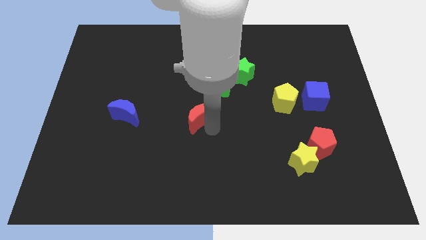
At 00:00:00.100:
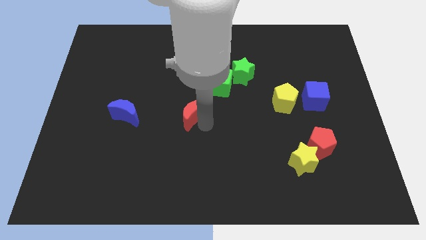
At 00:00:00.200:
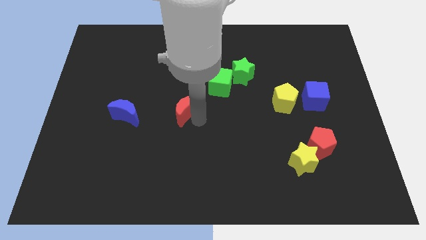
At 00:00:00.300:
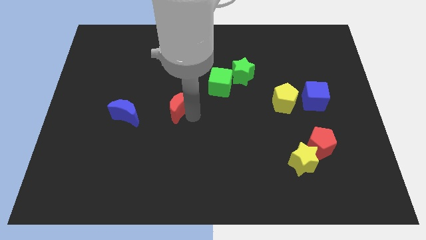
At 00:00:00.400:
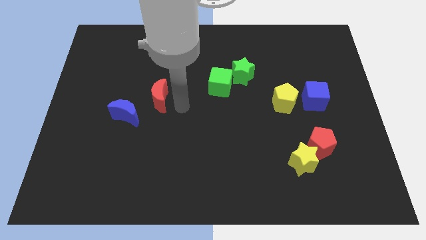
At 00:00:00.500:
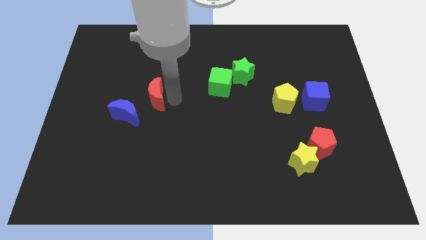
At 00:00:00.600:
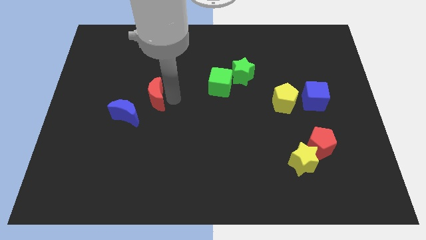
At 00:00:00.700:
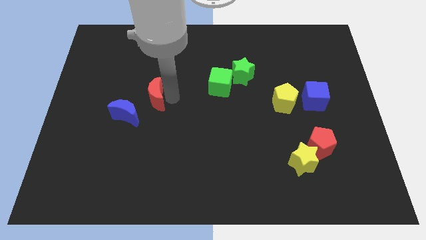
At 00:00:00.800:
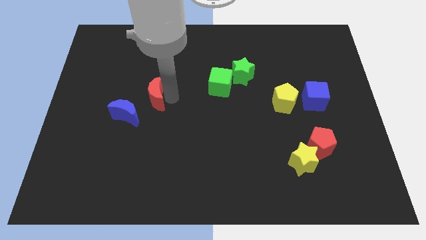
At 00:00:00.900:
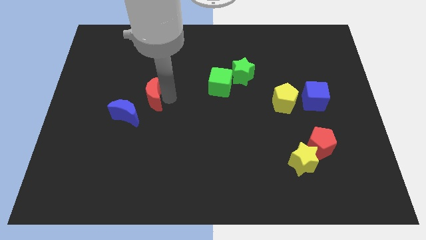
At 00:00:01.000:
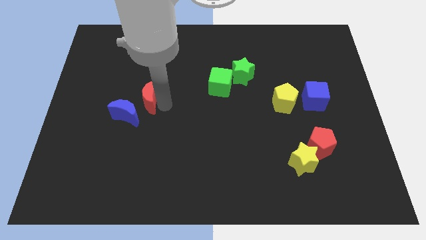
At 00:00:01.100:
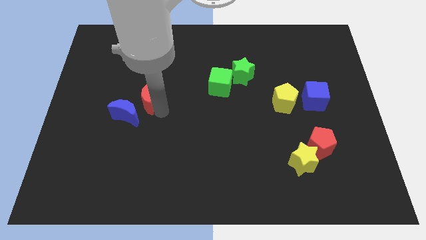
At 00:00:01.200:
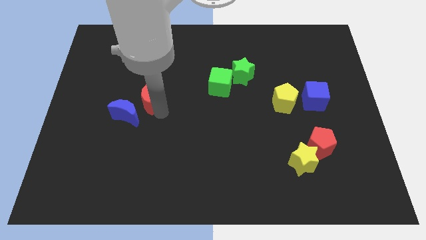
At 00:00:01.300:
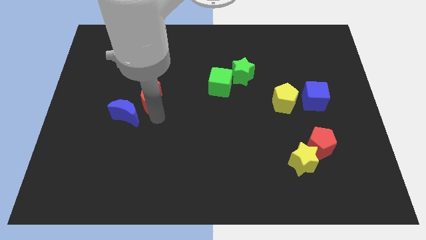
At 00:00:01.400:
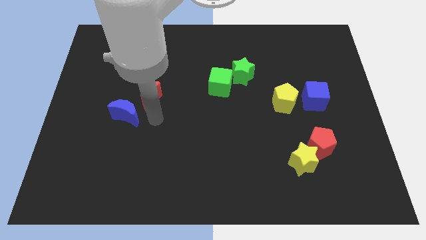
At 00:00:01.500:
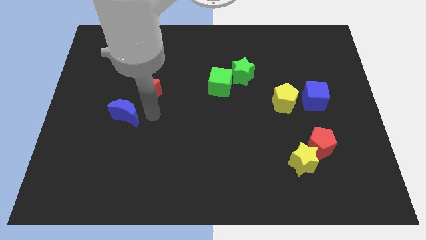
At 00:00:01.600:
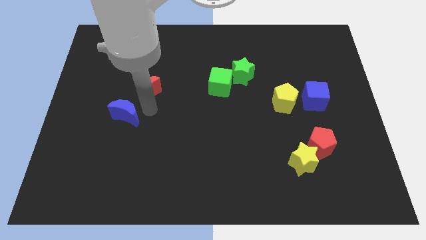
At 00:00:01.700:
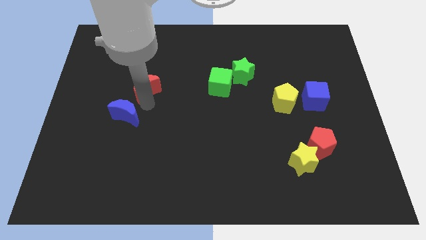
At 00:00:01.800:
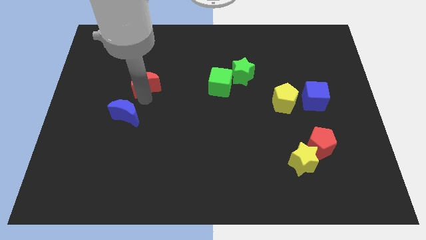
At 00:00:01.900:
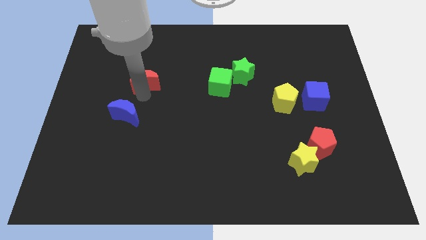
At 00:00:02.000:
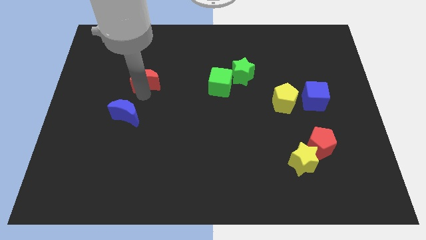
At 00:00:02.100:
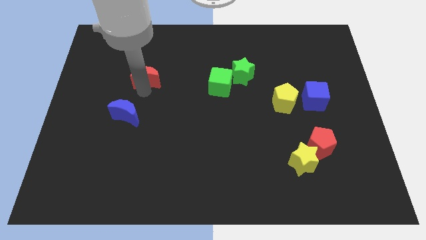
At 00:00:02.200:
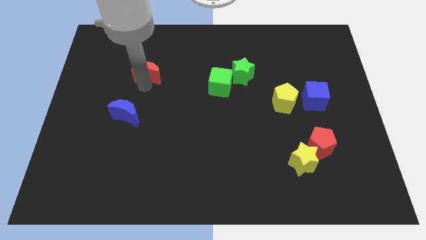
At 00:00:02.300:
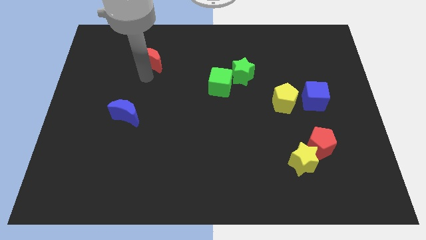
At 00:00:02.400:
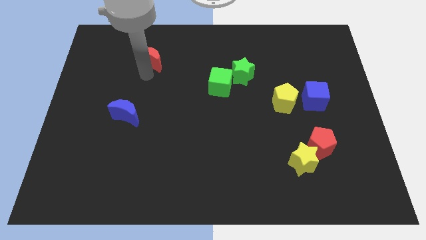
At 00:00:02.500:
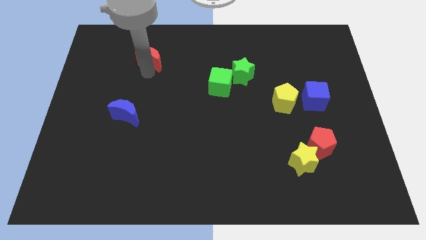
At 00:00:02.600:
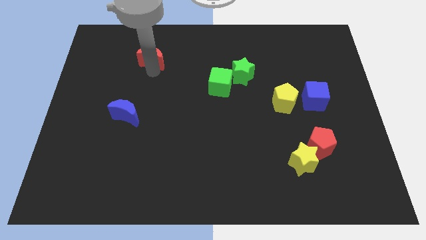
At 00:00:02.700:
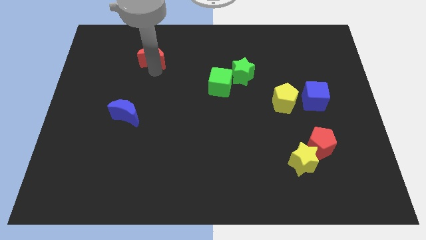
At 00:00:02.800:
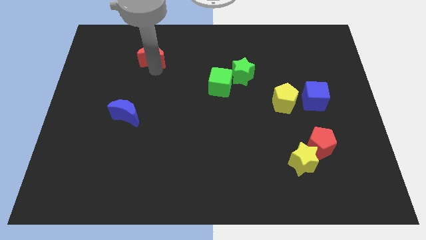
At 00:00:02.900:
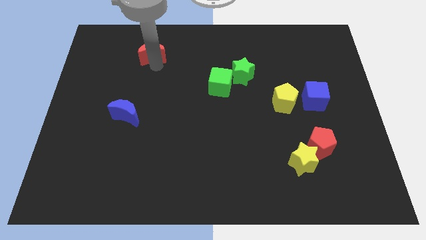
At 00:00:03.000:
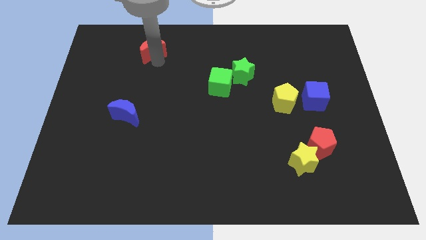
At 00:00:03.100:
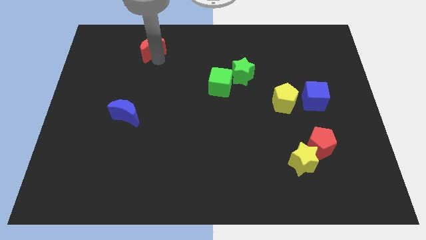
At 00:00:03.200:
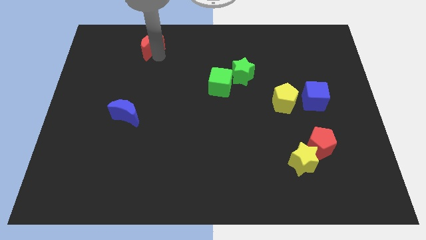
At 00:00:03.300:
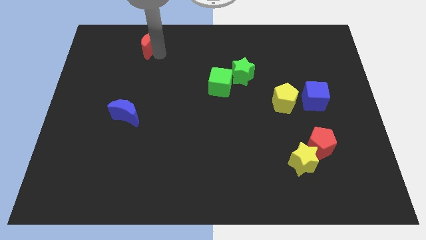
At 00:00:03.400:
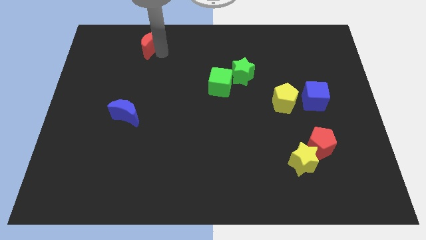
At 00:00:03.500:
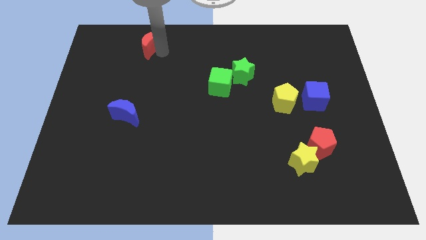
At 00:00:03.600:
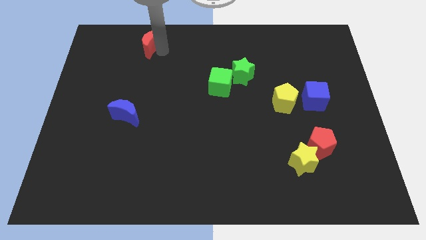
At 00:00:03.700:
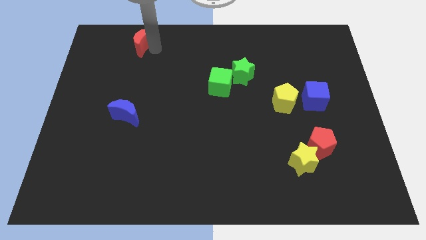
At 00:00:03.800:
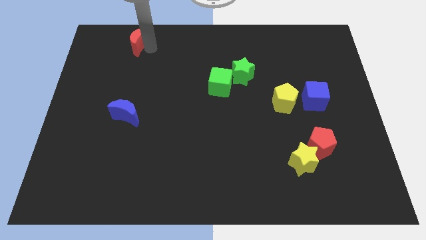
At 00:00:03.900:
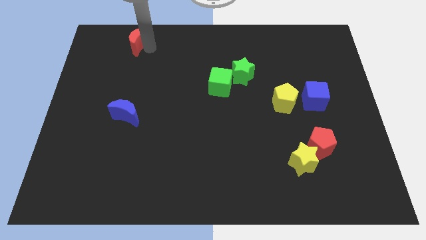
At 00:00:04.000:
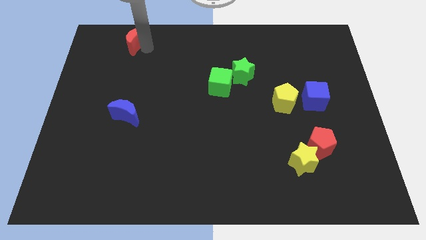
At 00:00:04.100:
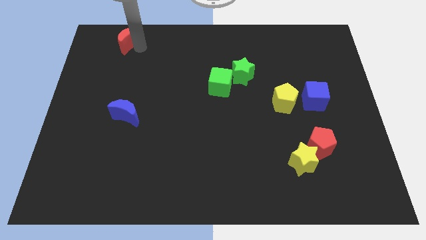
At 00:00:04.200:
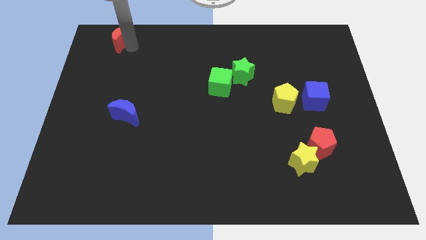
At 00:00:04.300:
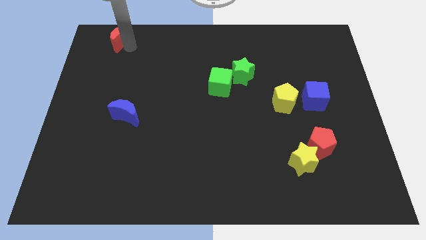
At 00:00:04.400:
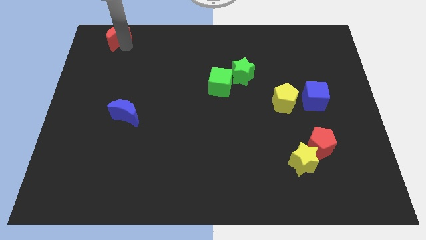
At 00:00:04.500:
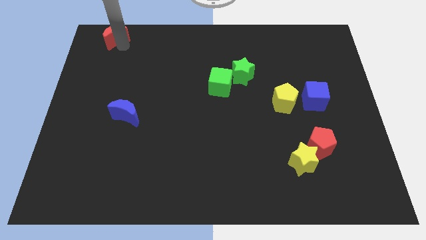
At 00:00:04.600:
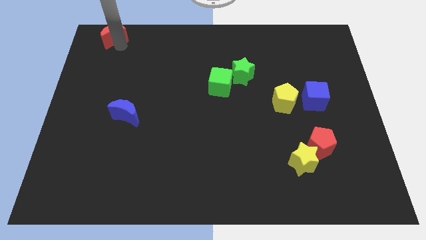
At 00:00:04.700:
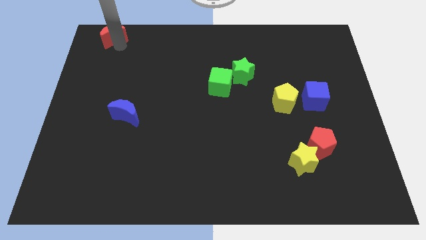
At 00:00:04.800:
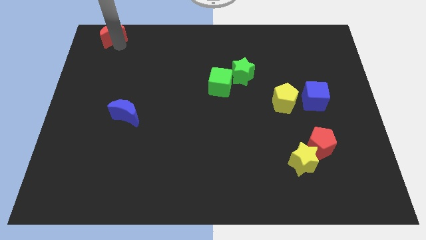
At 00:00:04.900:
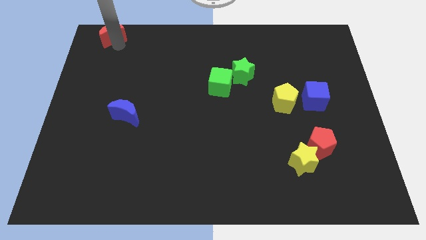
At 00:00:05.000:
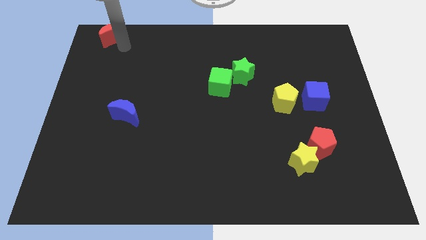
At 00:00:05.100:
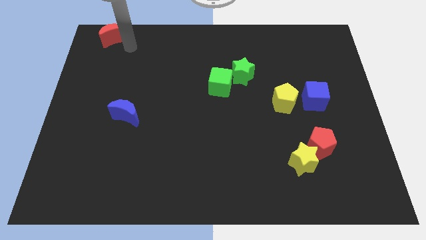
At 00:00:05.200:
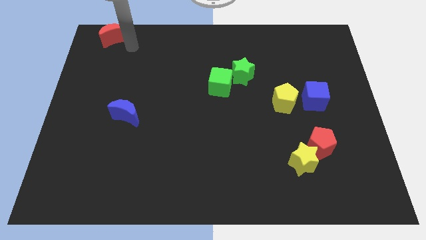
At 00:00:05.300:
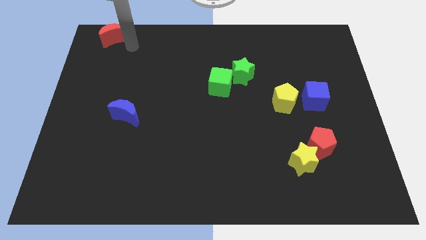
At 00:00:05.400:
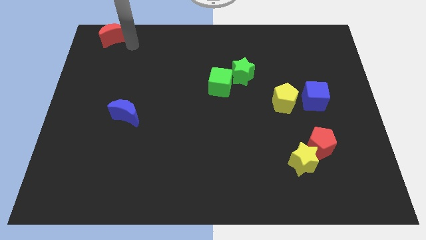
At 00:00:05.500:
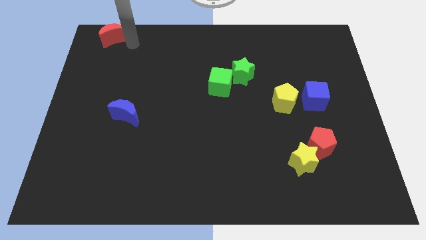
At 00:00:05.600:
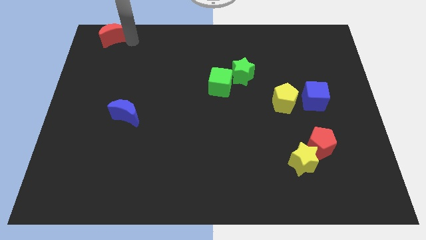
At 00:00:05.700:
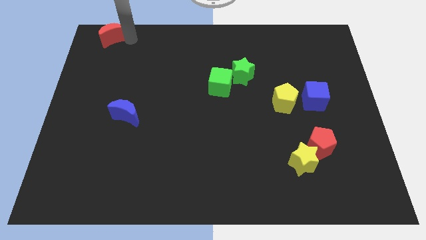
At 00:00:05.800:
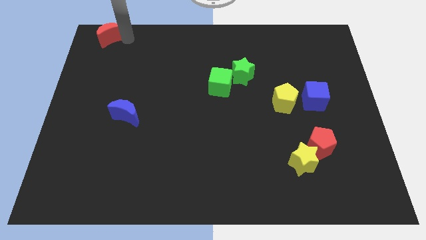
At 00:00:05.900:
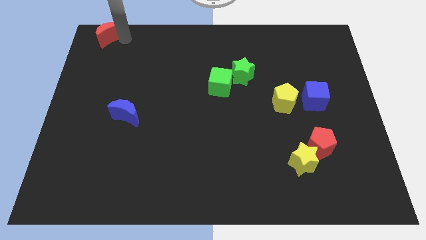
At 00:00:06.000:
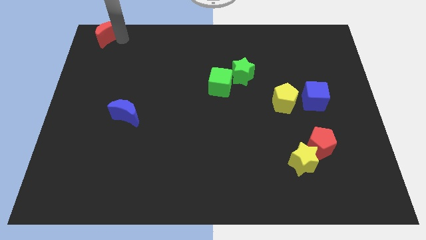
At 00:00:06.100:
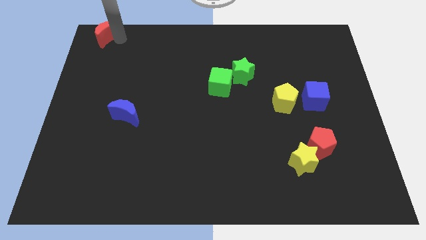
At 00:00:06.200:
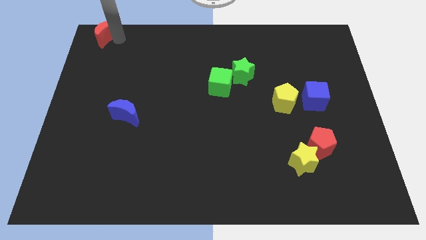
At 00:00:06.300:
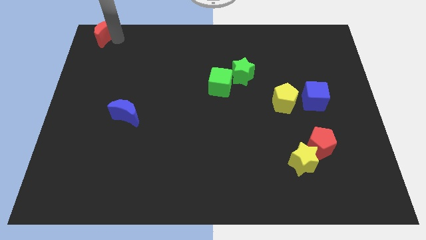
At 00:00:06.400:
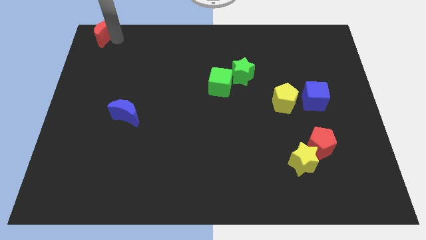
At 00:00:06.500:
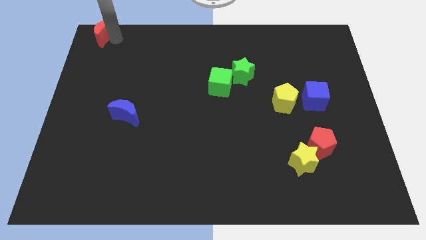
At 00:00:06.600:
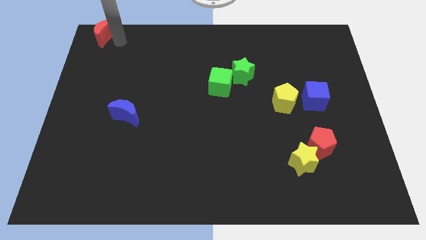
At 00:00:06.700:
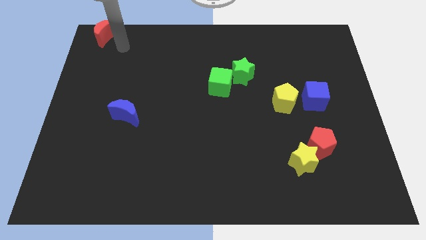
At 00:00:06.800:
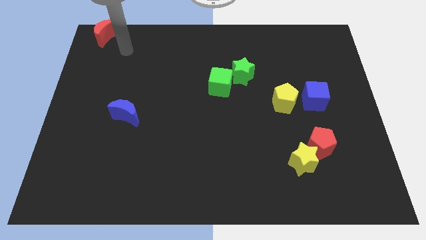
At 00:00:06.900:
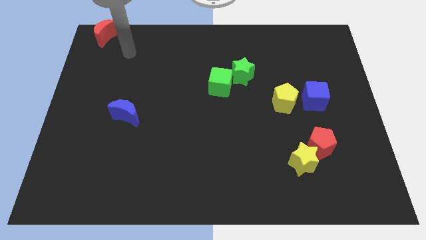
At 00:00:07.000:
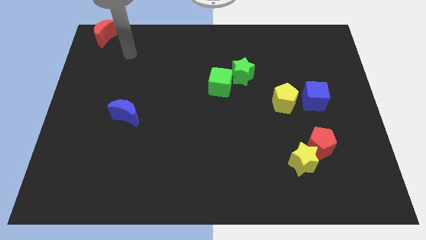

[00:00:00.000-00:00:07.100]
move the red moon towards the top left side of the board

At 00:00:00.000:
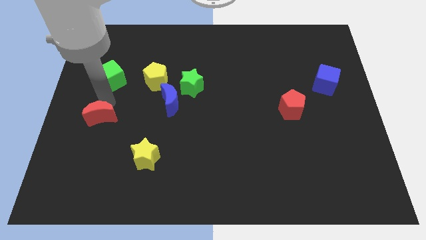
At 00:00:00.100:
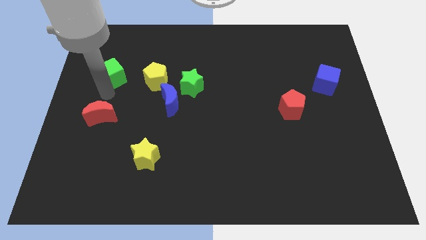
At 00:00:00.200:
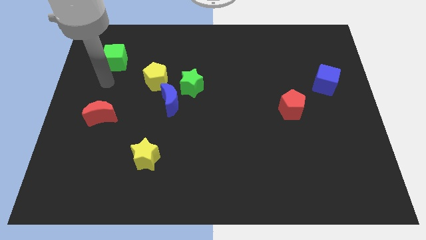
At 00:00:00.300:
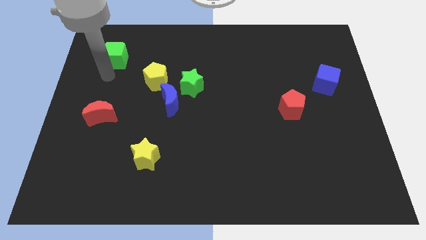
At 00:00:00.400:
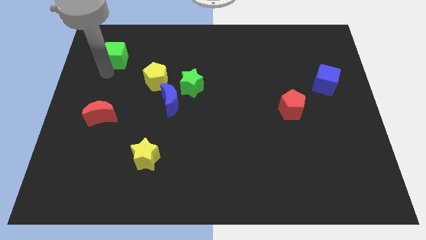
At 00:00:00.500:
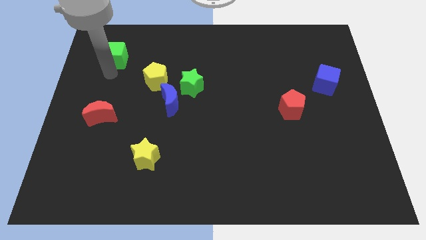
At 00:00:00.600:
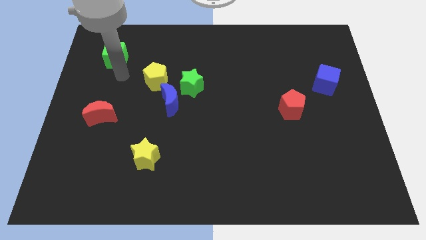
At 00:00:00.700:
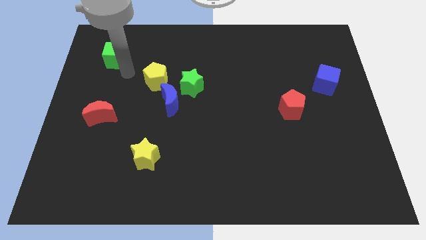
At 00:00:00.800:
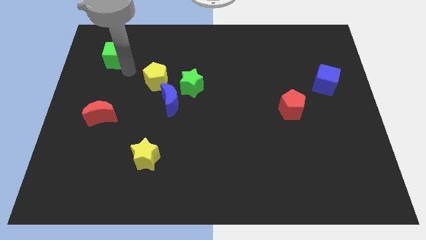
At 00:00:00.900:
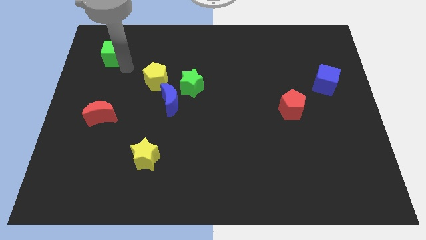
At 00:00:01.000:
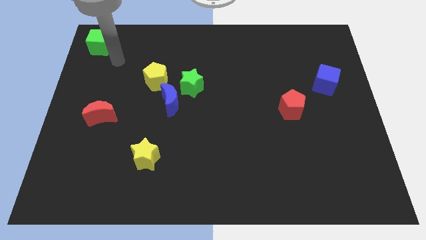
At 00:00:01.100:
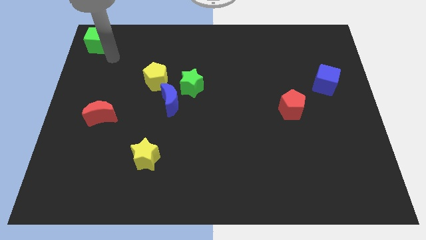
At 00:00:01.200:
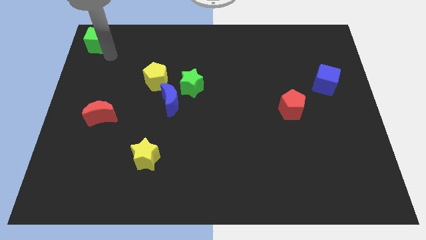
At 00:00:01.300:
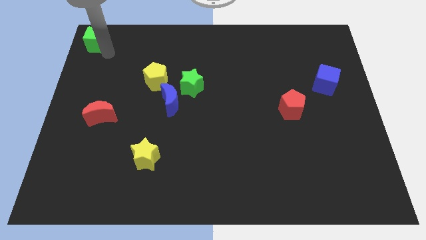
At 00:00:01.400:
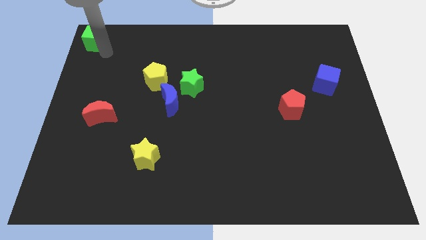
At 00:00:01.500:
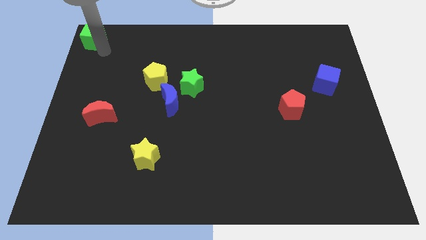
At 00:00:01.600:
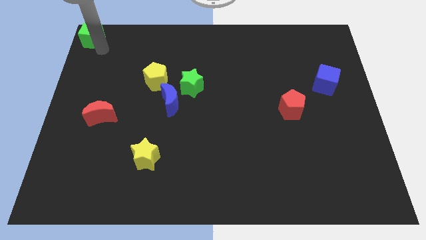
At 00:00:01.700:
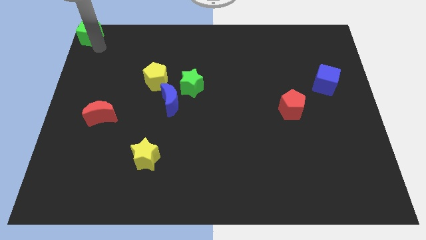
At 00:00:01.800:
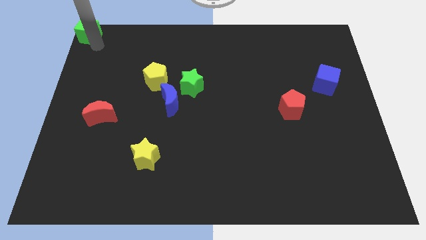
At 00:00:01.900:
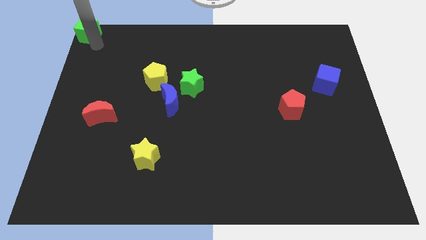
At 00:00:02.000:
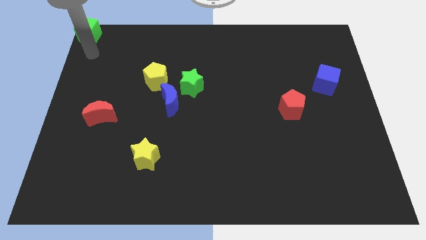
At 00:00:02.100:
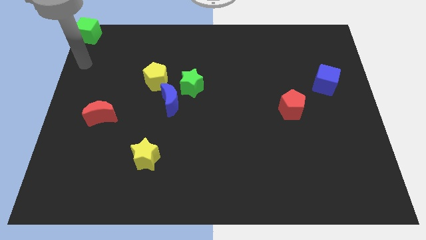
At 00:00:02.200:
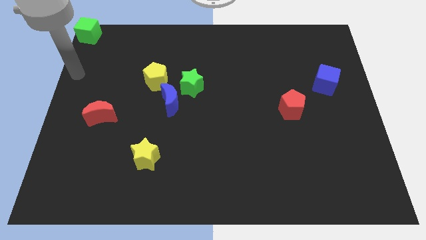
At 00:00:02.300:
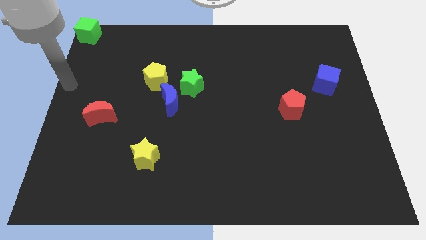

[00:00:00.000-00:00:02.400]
place green cube towards top left corner
